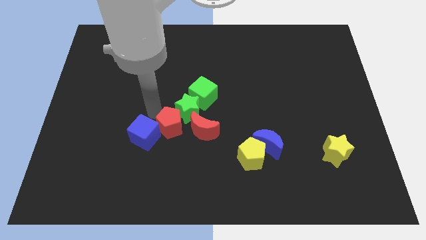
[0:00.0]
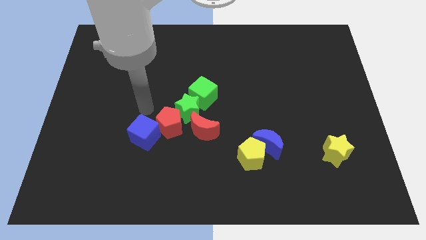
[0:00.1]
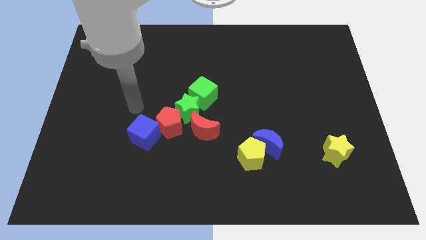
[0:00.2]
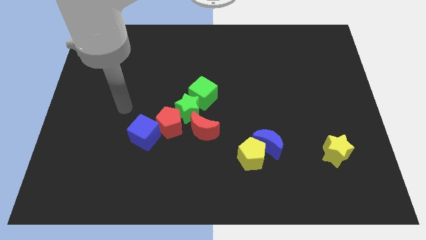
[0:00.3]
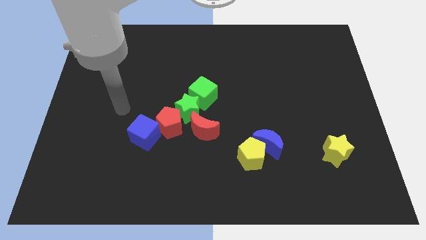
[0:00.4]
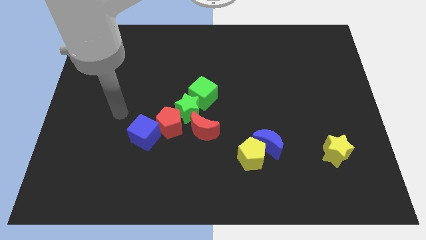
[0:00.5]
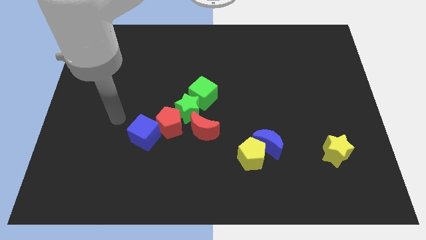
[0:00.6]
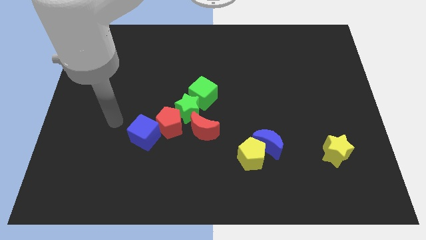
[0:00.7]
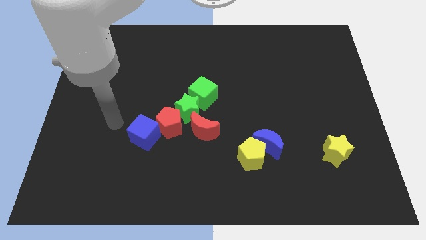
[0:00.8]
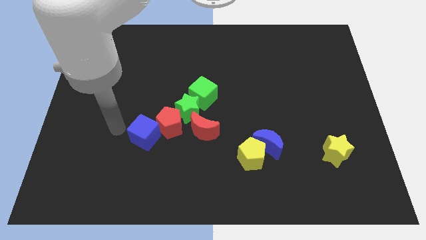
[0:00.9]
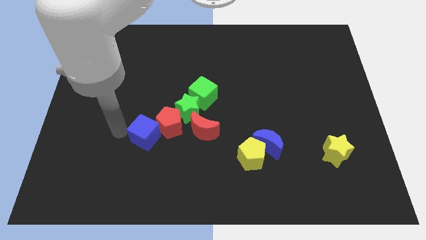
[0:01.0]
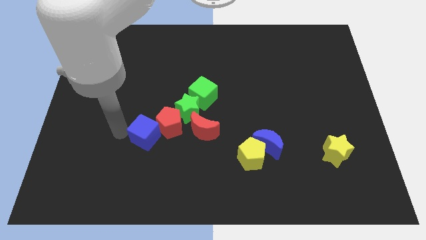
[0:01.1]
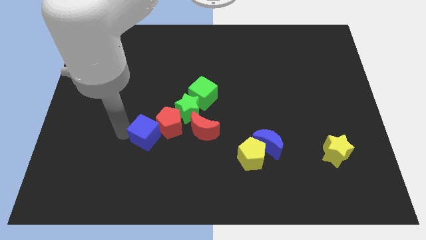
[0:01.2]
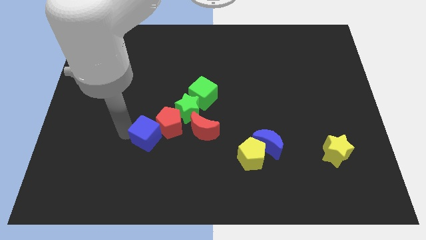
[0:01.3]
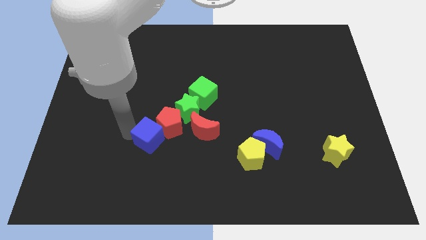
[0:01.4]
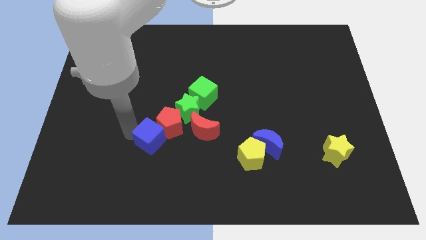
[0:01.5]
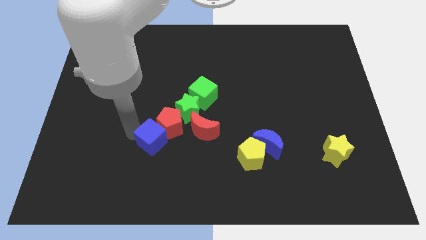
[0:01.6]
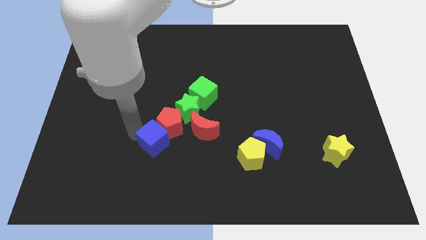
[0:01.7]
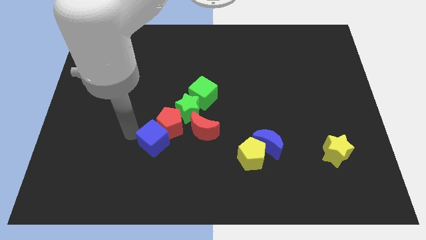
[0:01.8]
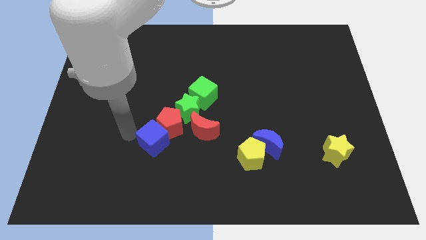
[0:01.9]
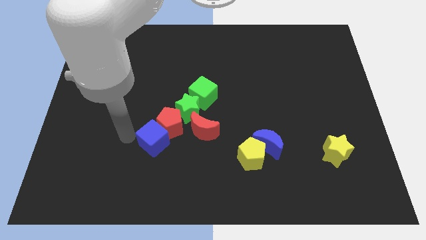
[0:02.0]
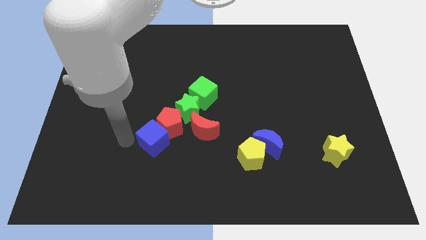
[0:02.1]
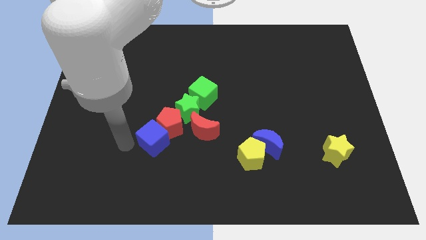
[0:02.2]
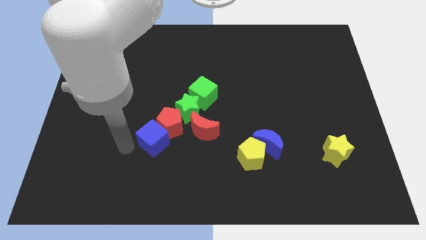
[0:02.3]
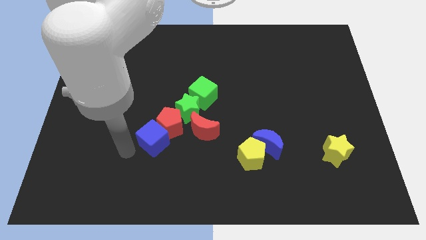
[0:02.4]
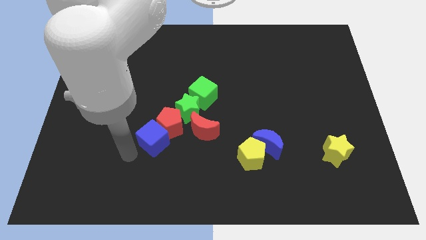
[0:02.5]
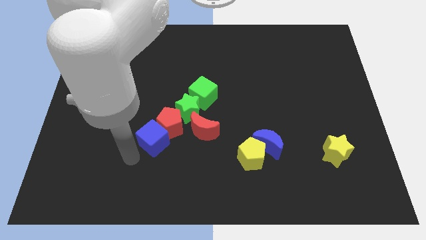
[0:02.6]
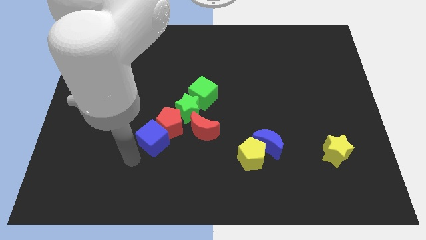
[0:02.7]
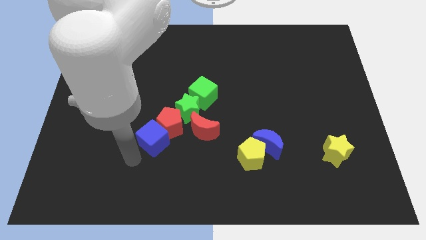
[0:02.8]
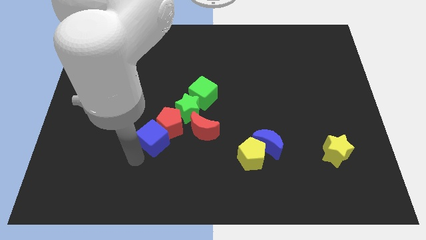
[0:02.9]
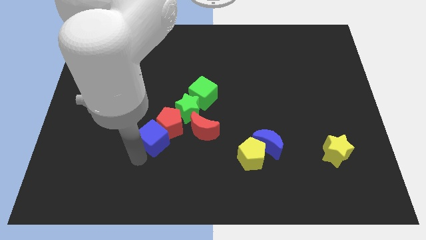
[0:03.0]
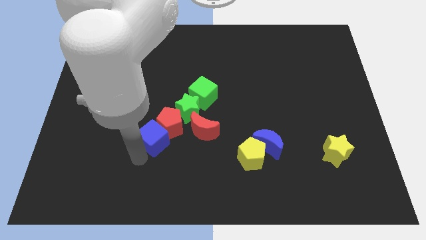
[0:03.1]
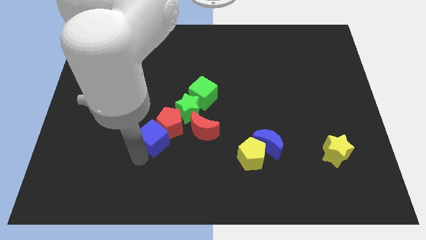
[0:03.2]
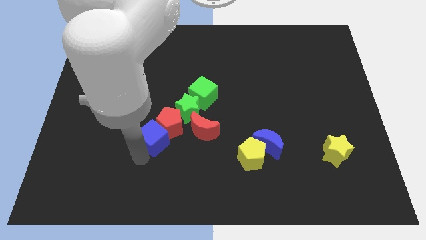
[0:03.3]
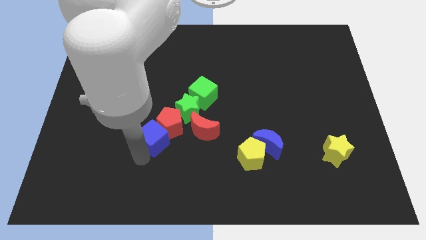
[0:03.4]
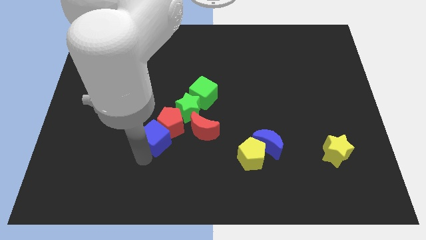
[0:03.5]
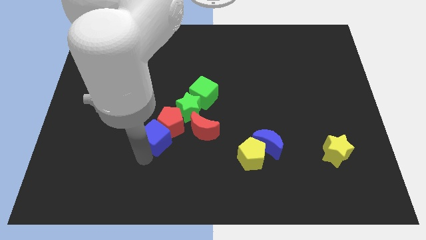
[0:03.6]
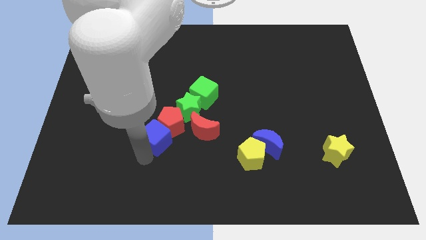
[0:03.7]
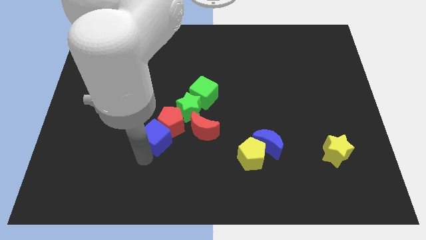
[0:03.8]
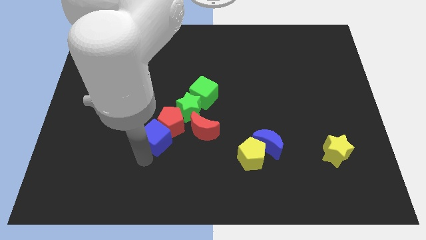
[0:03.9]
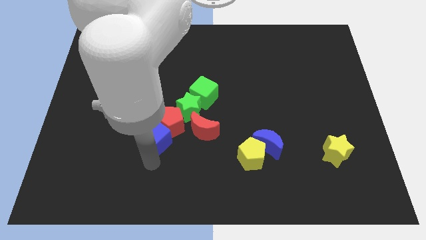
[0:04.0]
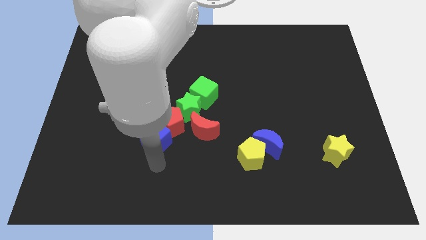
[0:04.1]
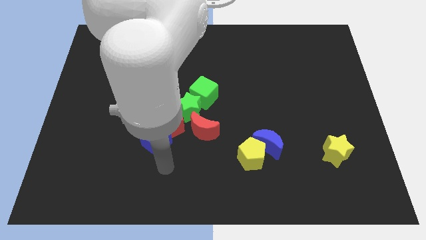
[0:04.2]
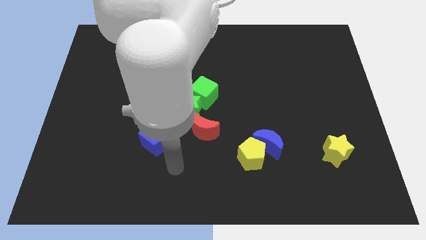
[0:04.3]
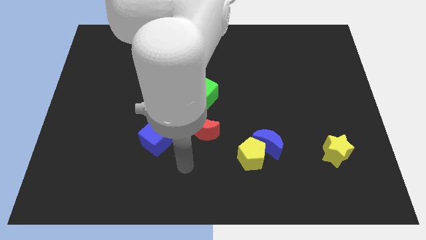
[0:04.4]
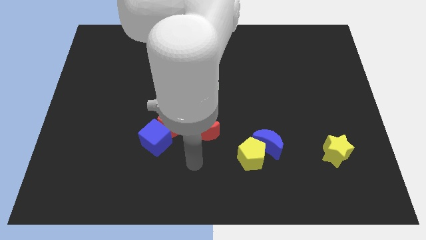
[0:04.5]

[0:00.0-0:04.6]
push the blue cube into the red pentagon

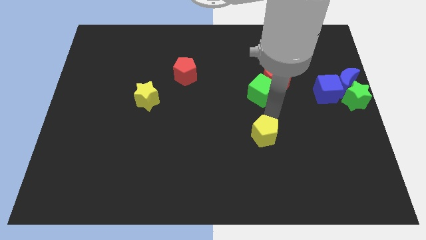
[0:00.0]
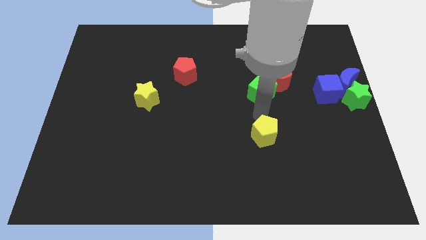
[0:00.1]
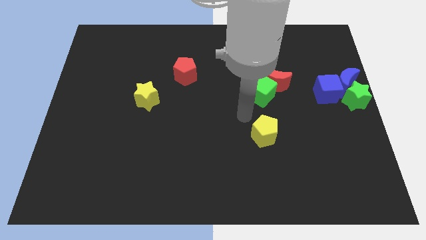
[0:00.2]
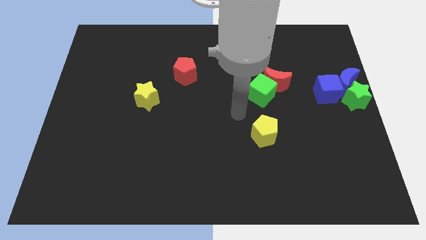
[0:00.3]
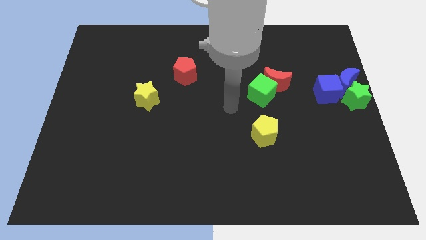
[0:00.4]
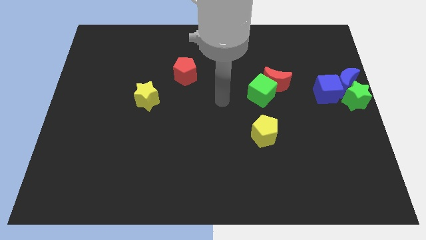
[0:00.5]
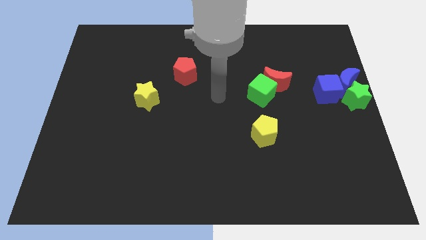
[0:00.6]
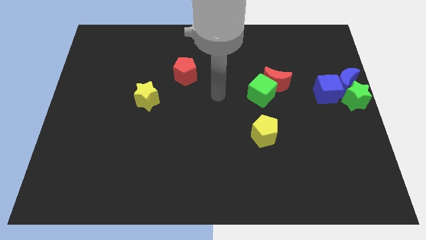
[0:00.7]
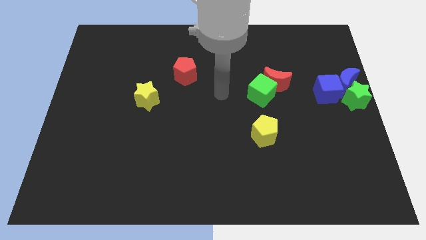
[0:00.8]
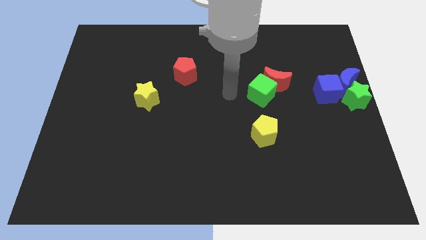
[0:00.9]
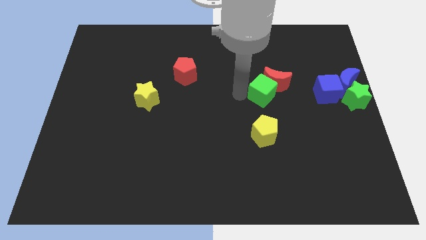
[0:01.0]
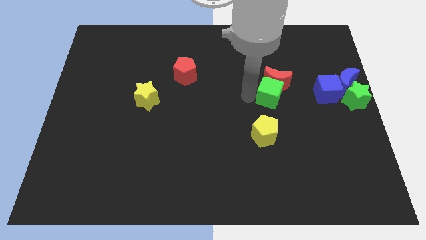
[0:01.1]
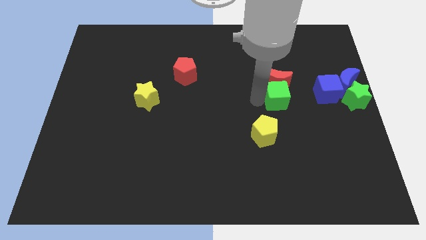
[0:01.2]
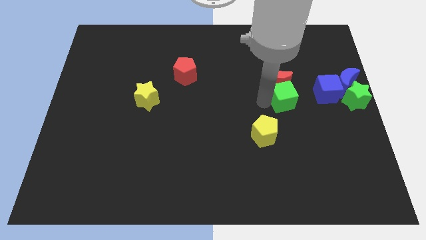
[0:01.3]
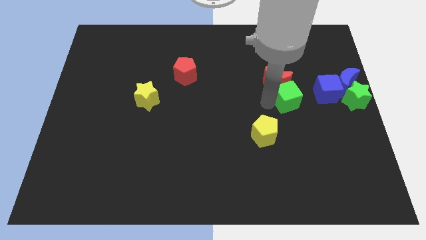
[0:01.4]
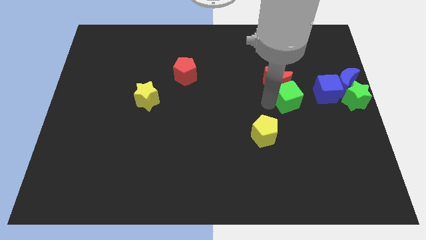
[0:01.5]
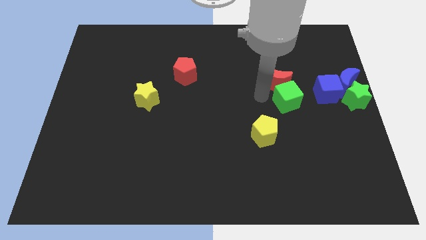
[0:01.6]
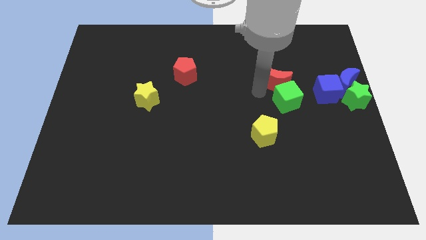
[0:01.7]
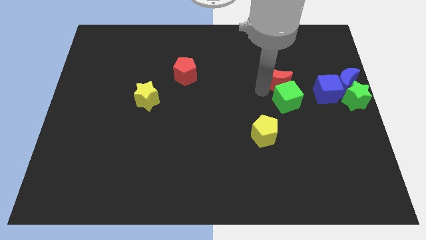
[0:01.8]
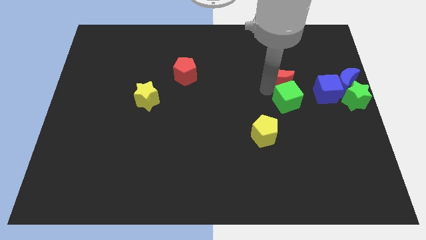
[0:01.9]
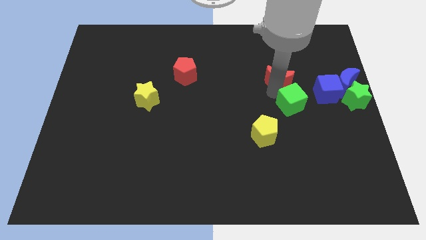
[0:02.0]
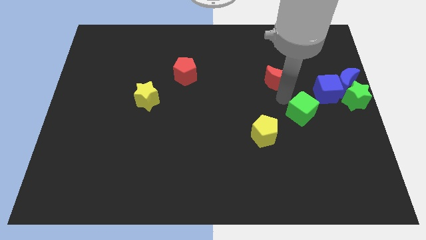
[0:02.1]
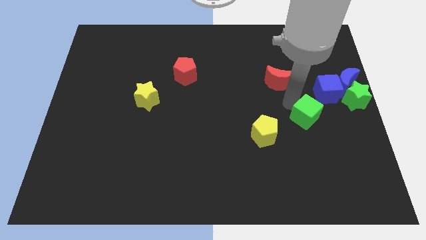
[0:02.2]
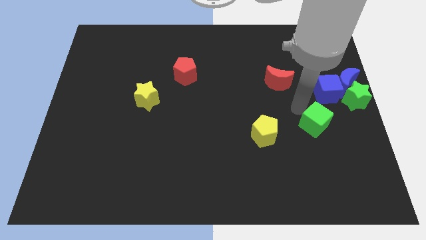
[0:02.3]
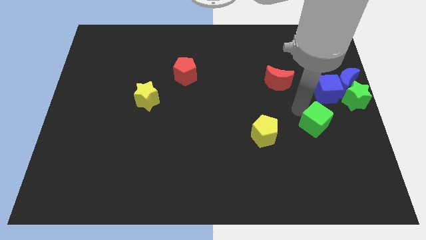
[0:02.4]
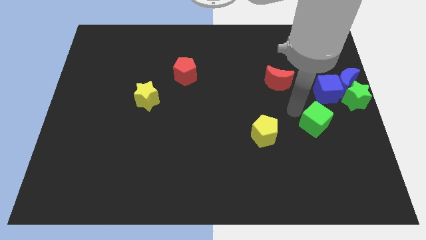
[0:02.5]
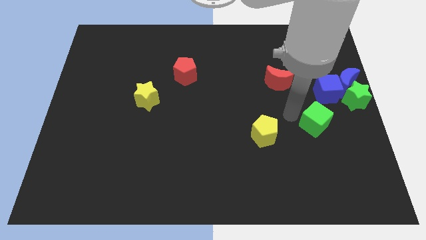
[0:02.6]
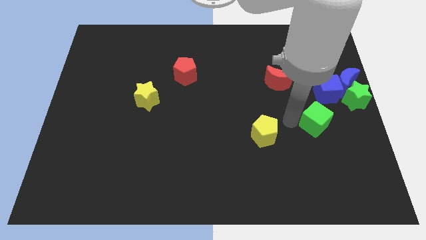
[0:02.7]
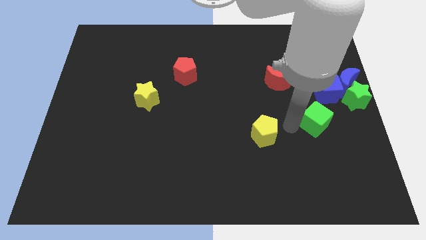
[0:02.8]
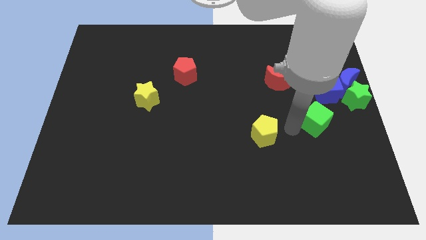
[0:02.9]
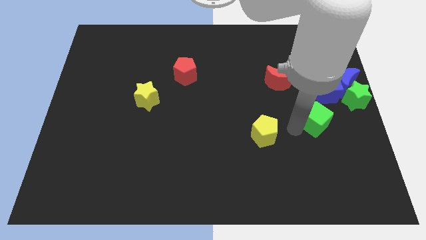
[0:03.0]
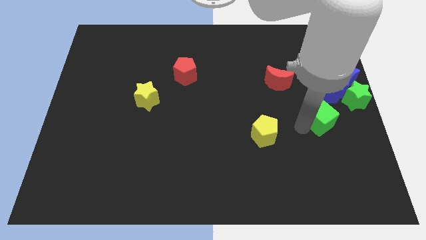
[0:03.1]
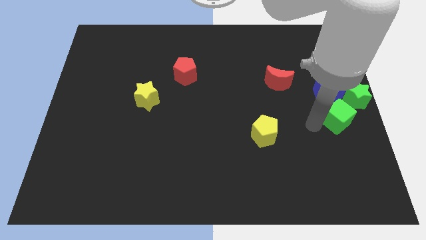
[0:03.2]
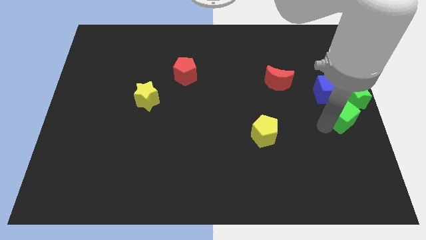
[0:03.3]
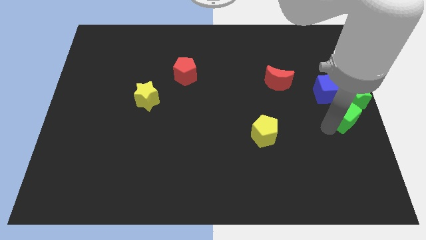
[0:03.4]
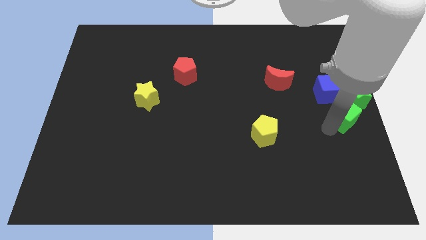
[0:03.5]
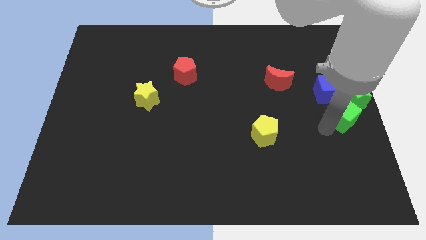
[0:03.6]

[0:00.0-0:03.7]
move the green star away from the red crescent

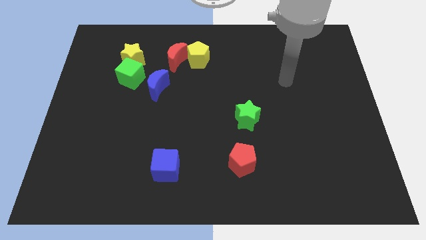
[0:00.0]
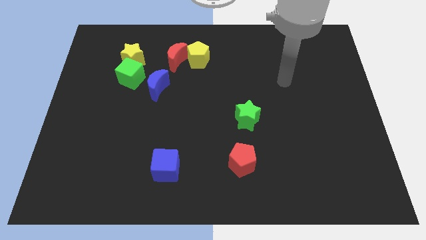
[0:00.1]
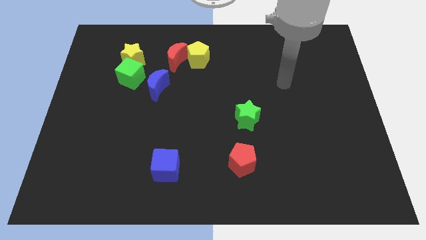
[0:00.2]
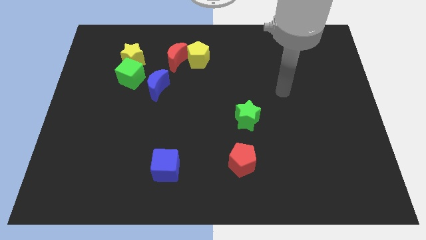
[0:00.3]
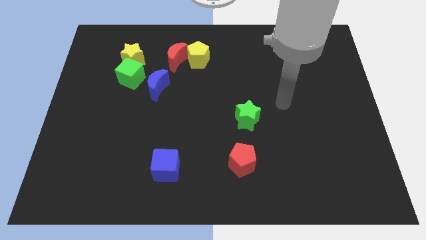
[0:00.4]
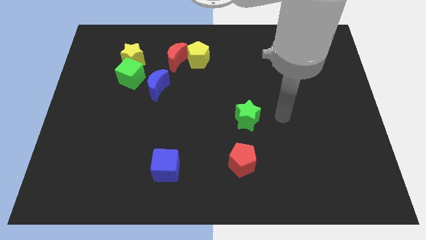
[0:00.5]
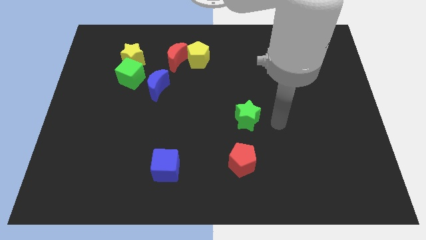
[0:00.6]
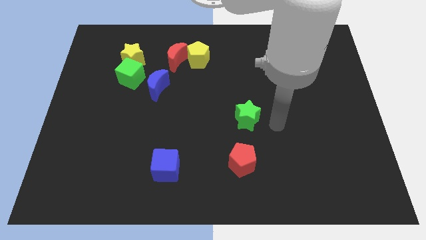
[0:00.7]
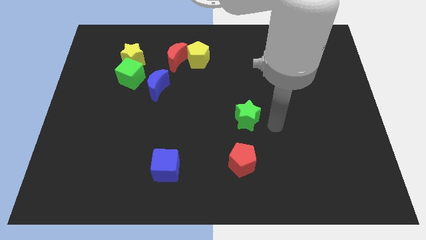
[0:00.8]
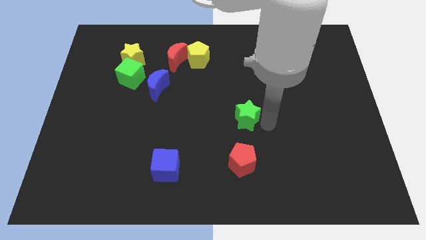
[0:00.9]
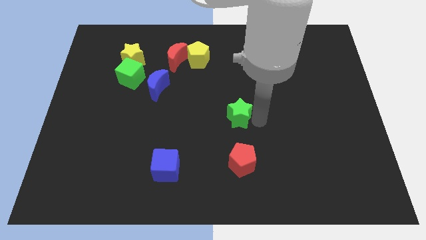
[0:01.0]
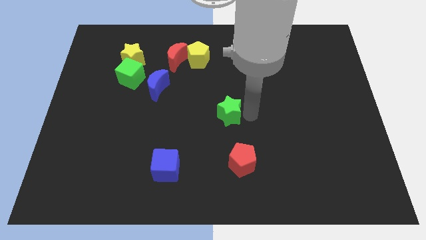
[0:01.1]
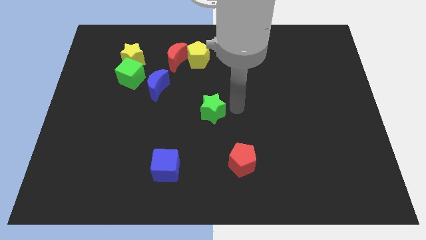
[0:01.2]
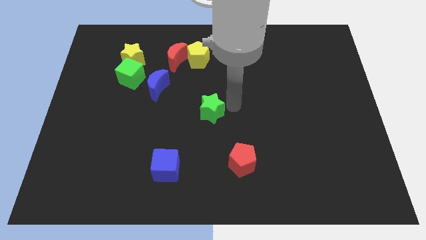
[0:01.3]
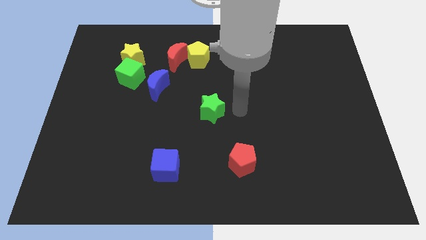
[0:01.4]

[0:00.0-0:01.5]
slide the green star towards the center of the board
